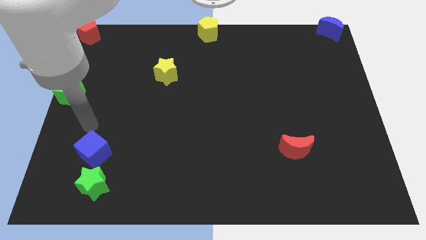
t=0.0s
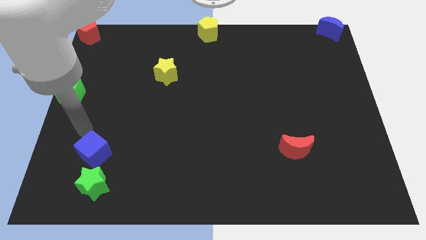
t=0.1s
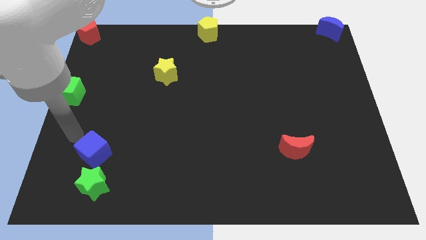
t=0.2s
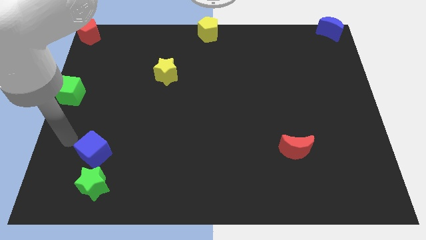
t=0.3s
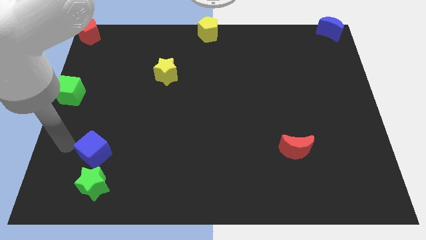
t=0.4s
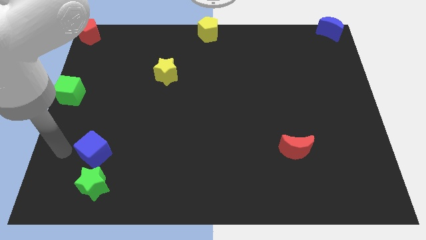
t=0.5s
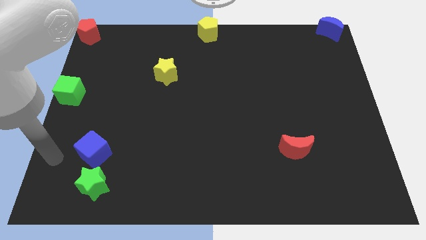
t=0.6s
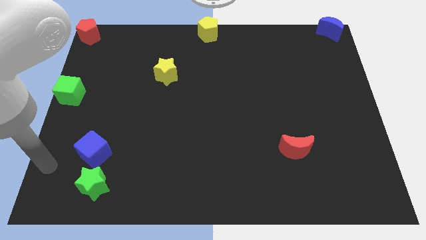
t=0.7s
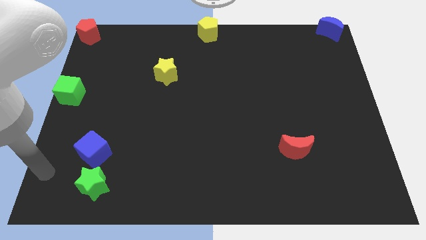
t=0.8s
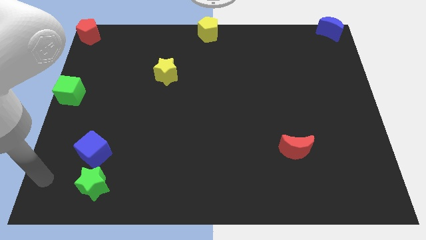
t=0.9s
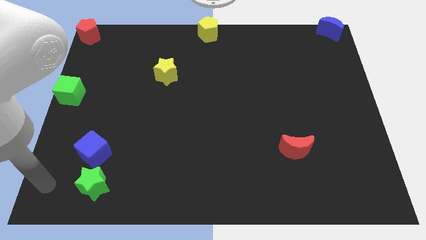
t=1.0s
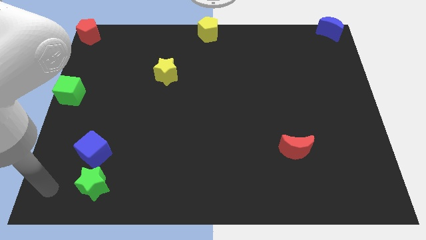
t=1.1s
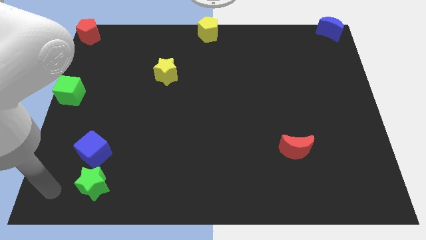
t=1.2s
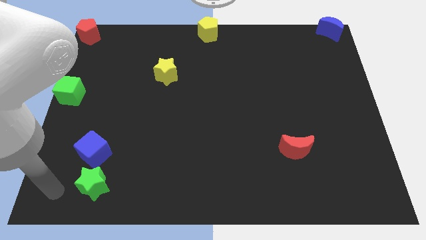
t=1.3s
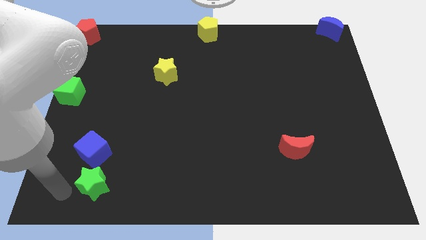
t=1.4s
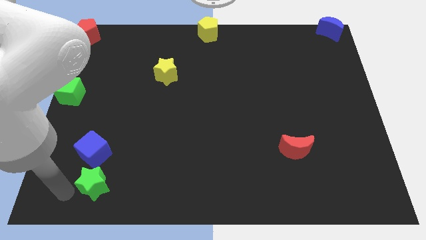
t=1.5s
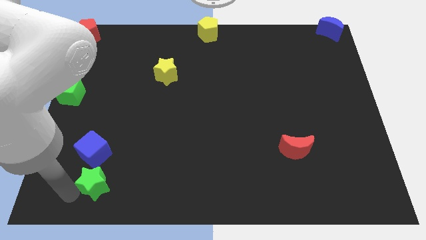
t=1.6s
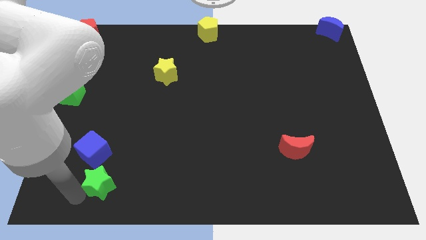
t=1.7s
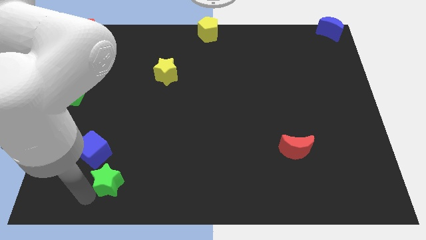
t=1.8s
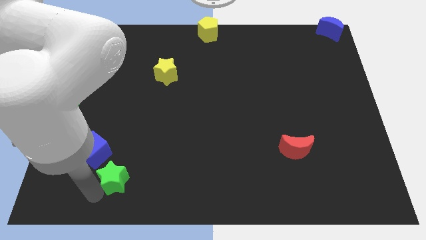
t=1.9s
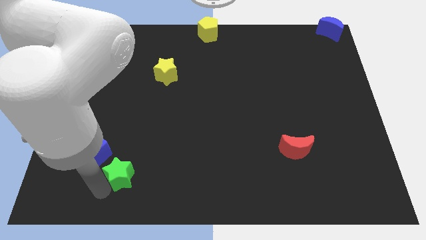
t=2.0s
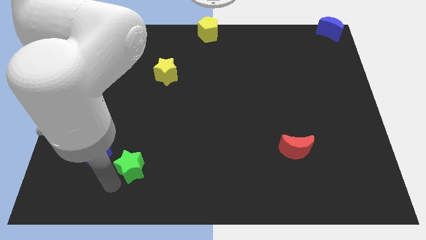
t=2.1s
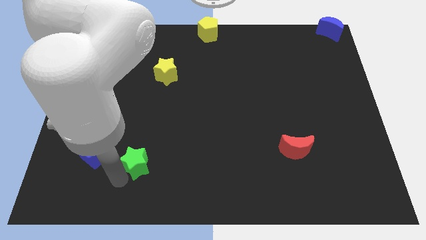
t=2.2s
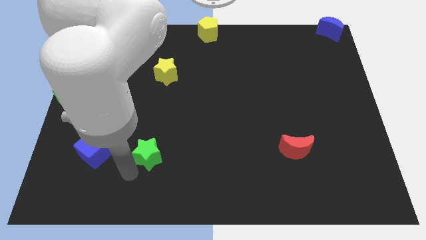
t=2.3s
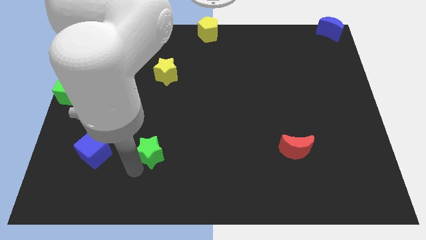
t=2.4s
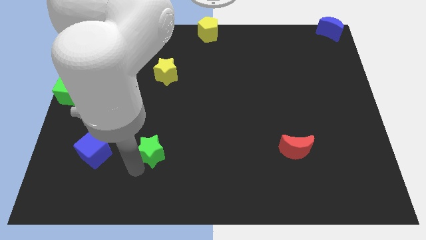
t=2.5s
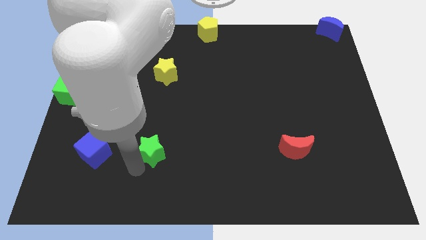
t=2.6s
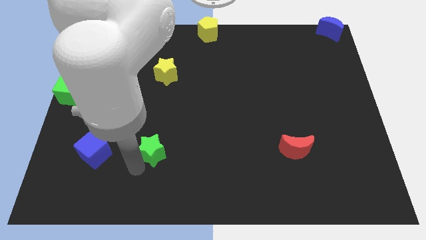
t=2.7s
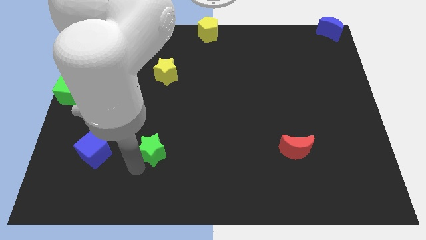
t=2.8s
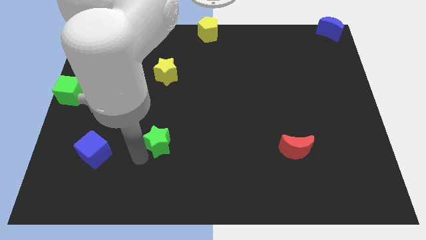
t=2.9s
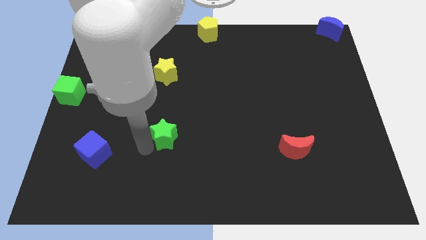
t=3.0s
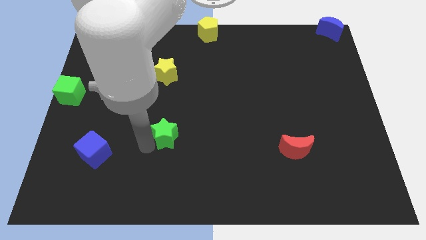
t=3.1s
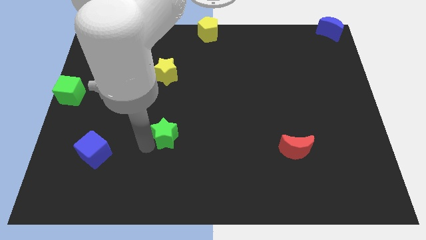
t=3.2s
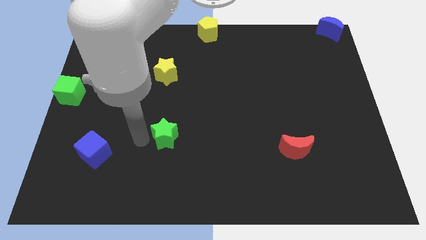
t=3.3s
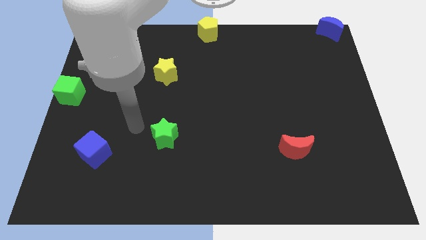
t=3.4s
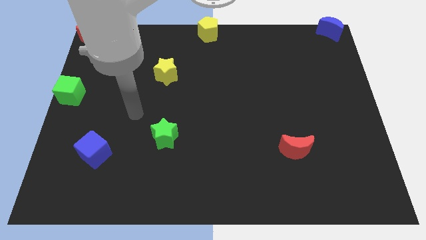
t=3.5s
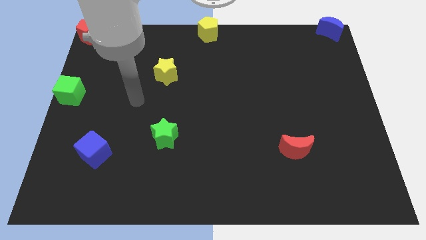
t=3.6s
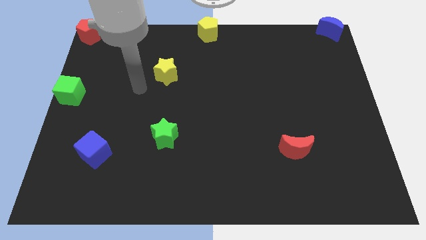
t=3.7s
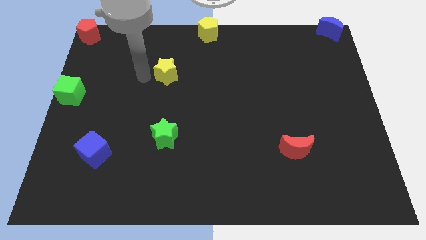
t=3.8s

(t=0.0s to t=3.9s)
move the green star horizontally to the left side of the red moon

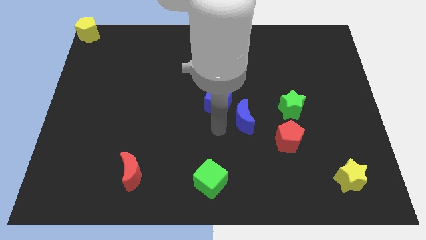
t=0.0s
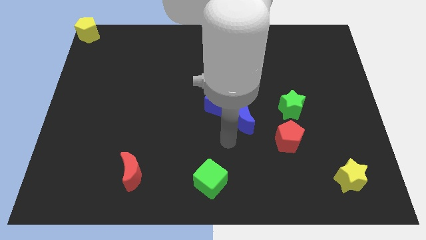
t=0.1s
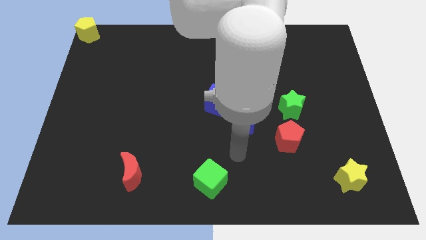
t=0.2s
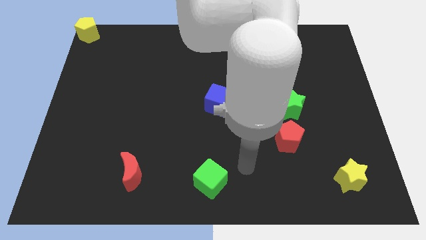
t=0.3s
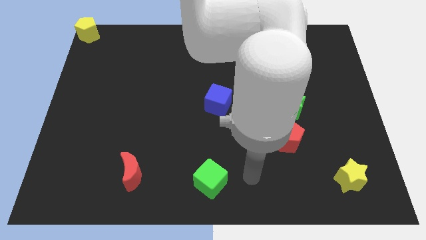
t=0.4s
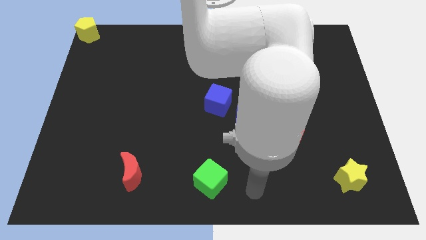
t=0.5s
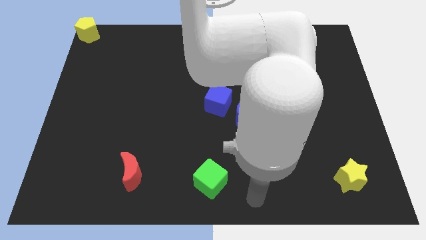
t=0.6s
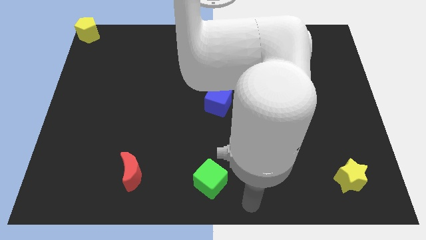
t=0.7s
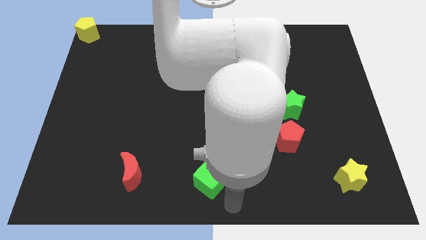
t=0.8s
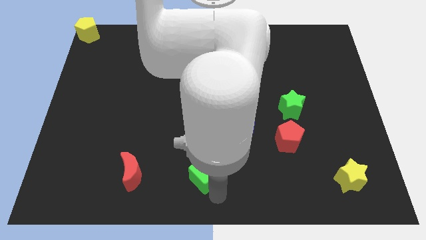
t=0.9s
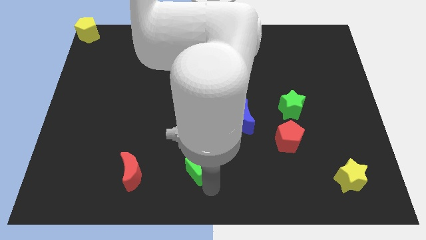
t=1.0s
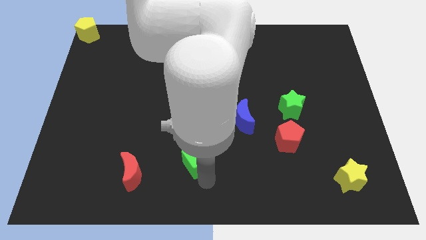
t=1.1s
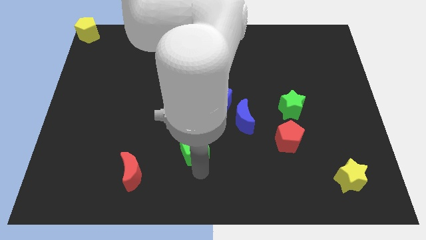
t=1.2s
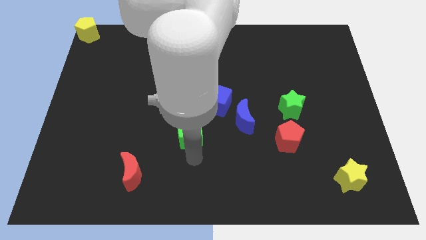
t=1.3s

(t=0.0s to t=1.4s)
move the green cube diagonally top right to the red moon

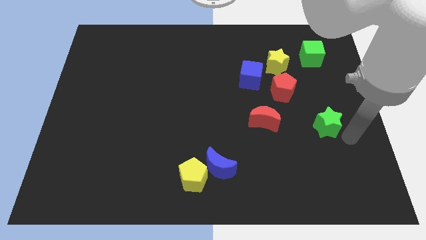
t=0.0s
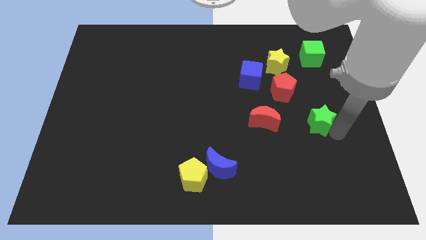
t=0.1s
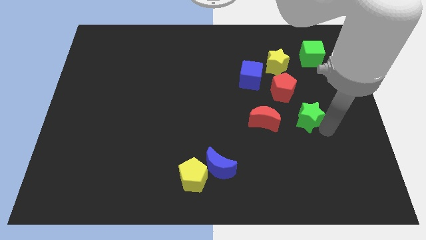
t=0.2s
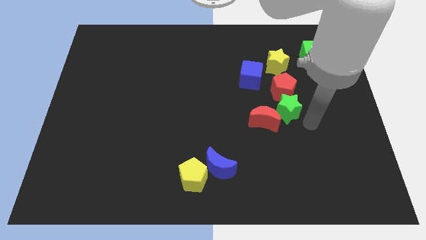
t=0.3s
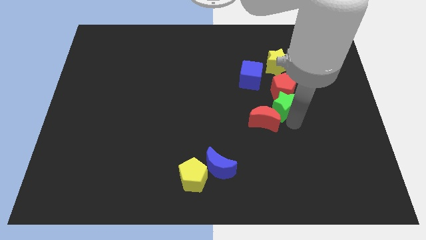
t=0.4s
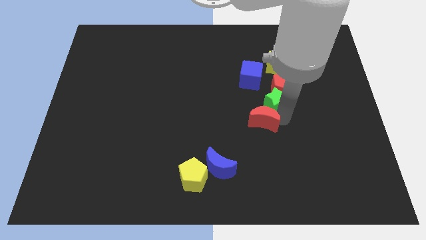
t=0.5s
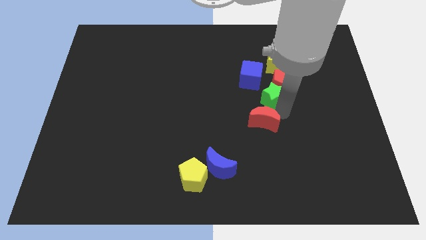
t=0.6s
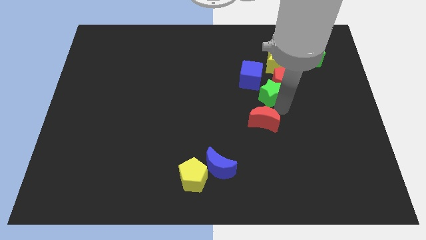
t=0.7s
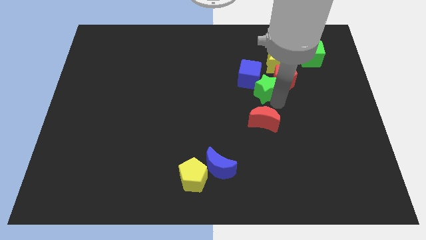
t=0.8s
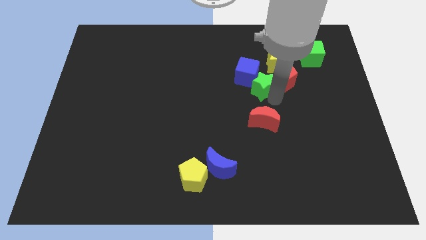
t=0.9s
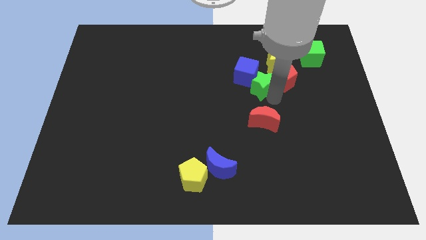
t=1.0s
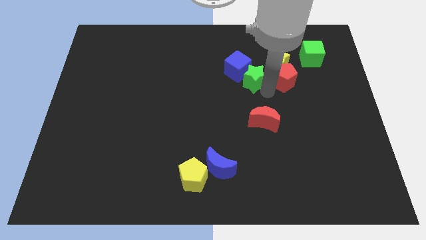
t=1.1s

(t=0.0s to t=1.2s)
move the green star into the blue cube

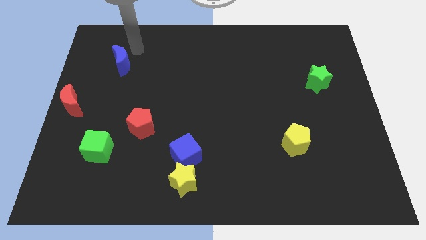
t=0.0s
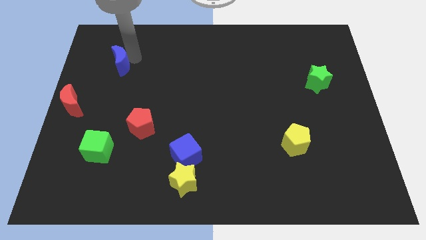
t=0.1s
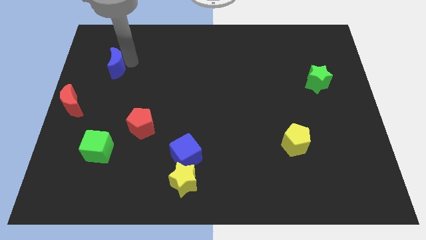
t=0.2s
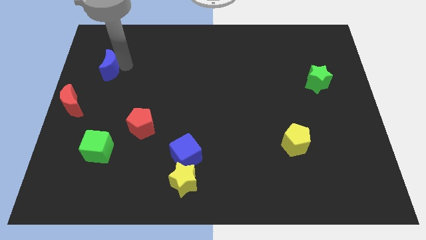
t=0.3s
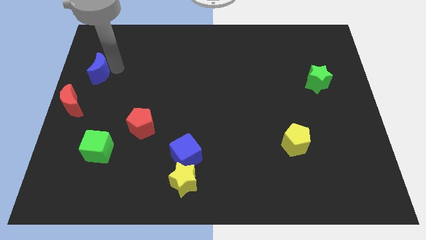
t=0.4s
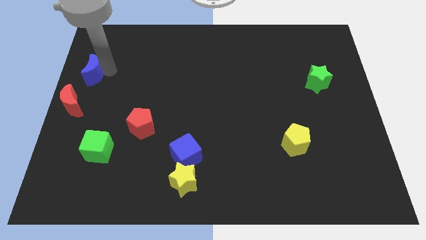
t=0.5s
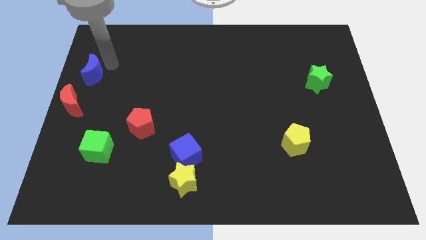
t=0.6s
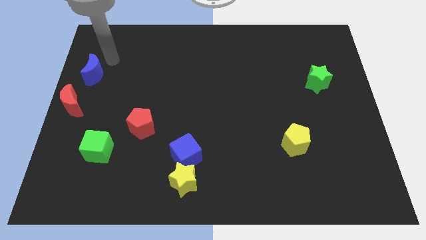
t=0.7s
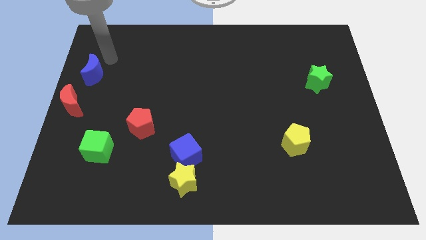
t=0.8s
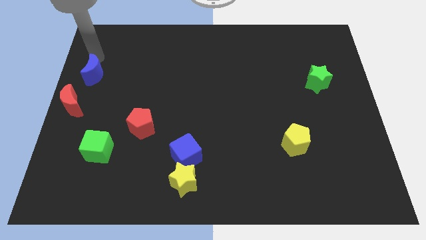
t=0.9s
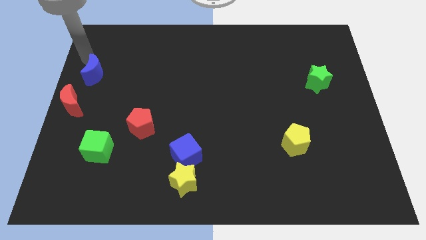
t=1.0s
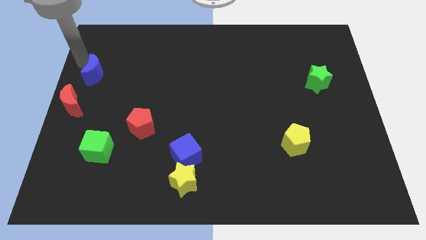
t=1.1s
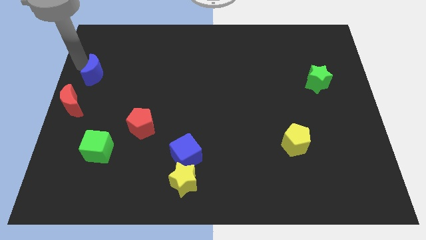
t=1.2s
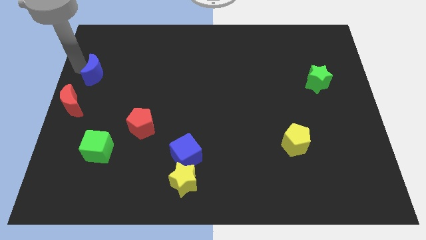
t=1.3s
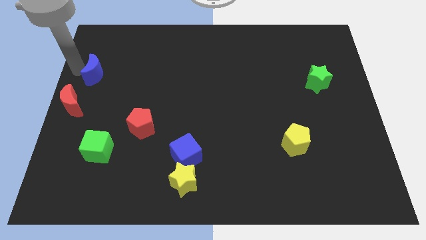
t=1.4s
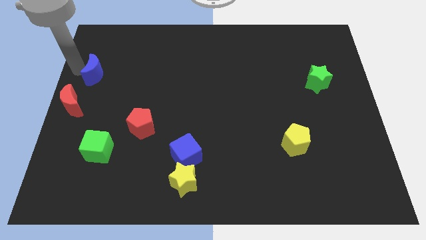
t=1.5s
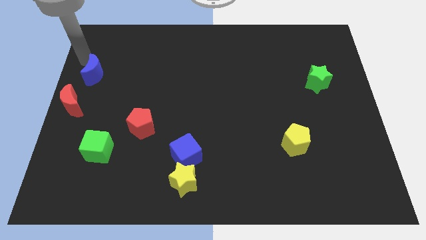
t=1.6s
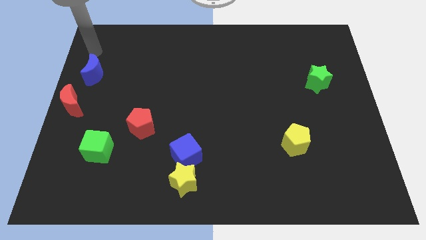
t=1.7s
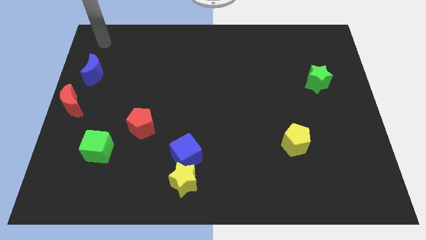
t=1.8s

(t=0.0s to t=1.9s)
push the blue crescent to the top of the blue crescent

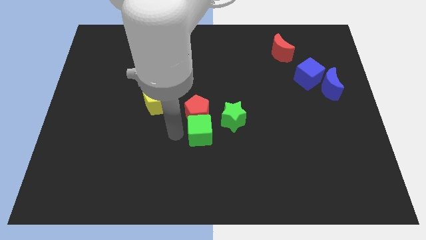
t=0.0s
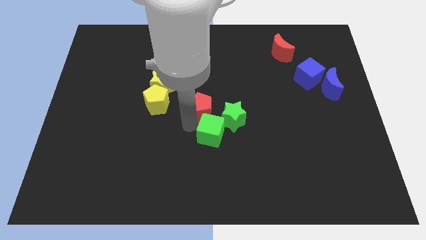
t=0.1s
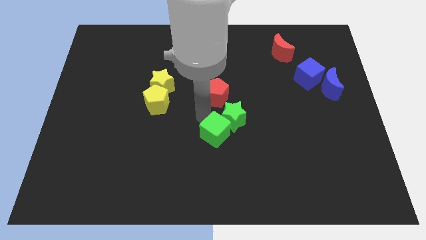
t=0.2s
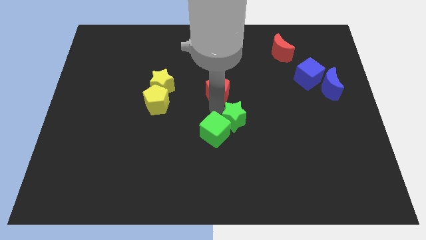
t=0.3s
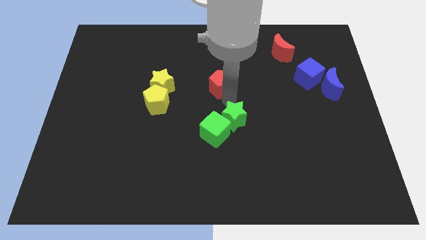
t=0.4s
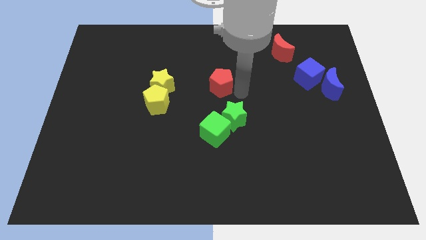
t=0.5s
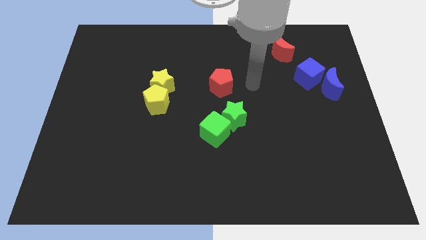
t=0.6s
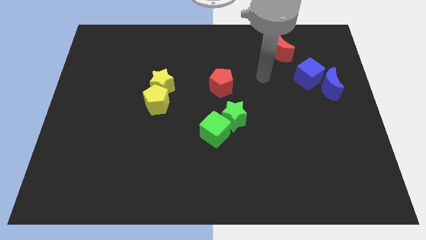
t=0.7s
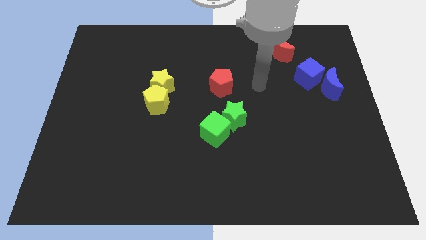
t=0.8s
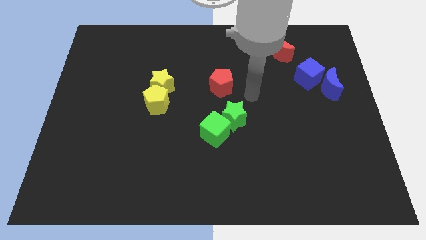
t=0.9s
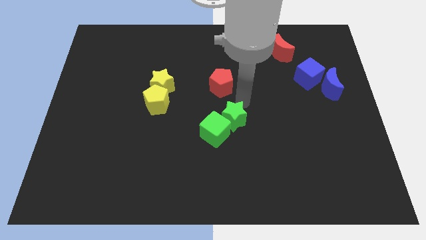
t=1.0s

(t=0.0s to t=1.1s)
separate green cube and red pentagon
